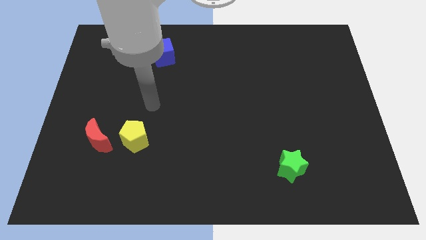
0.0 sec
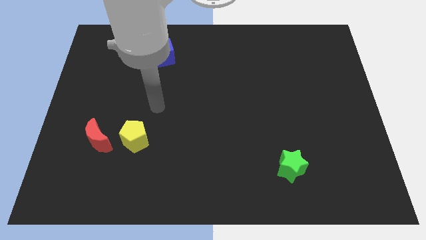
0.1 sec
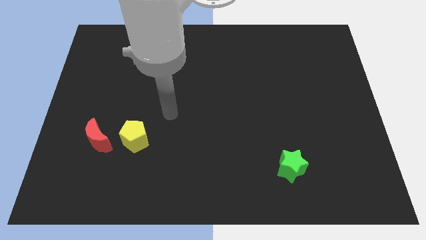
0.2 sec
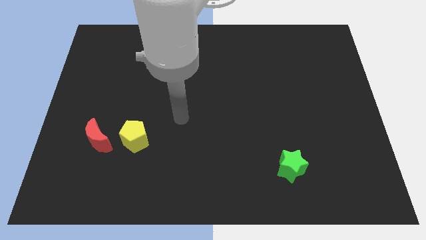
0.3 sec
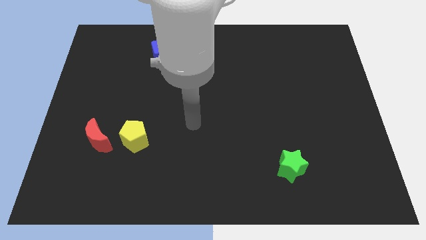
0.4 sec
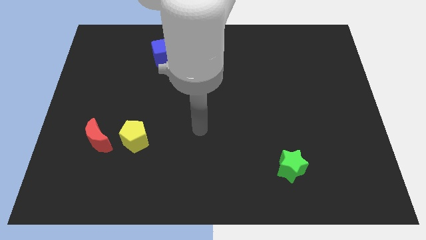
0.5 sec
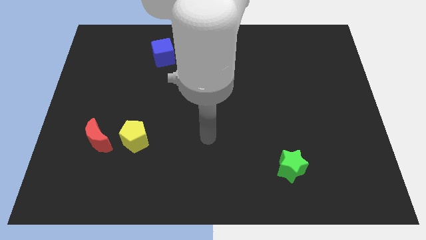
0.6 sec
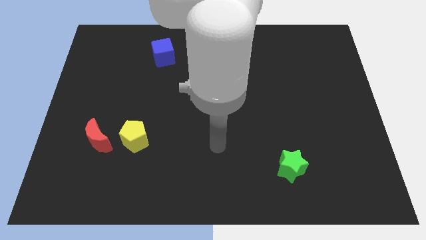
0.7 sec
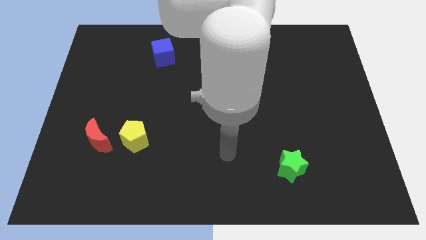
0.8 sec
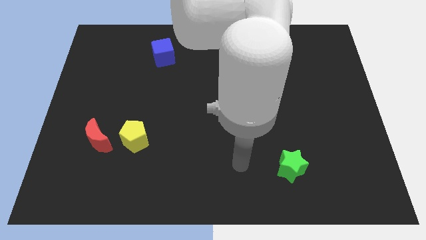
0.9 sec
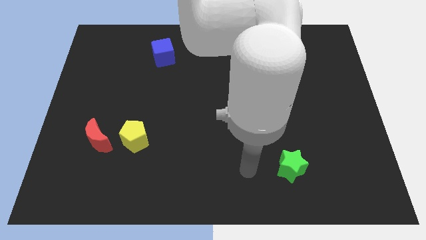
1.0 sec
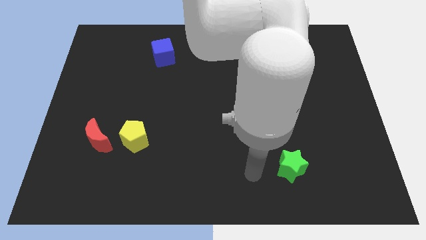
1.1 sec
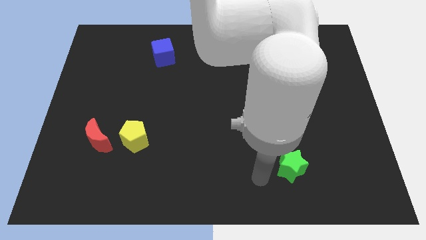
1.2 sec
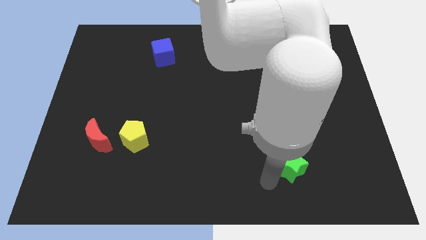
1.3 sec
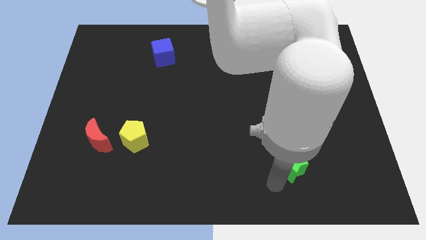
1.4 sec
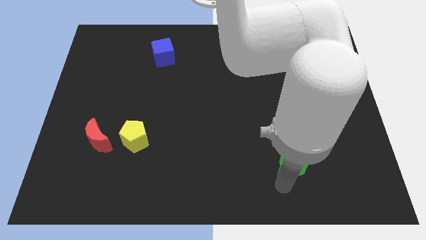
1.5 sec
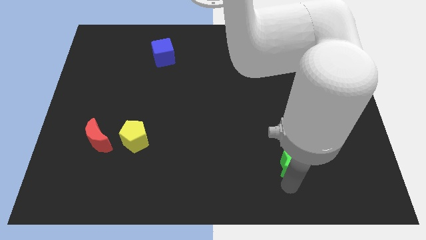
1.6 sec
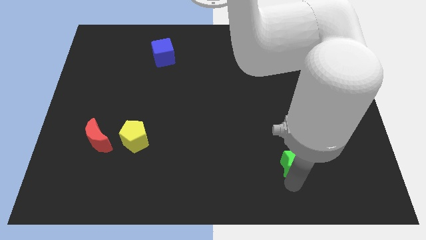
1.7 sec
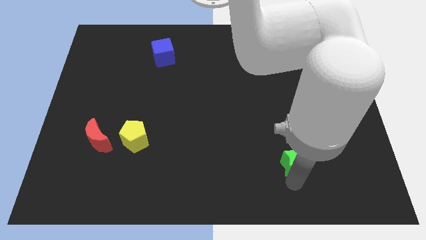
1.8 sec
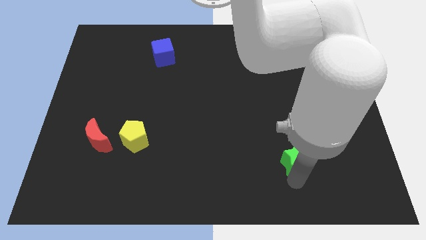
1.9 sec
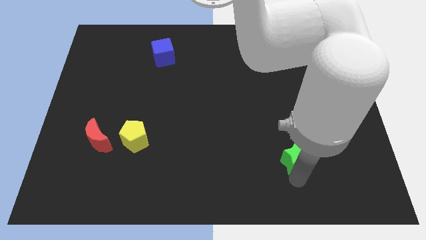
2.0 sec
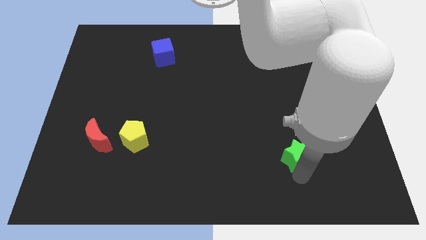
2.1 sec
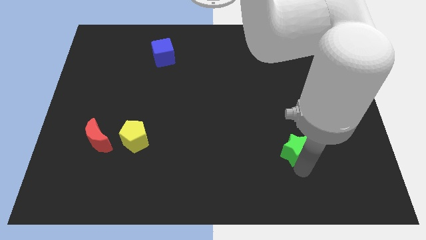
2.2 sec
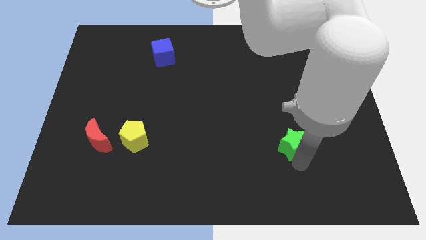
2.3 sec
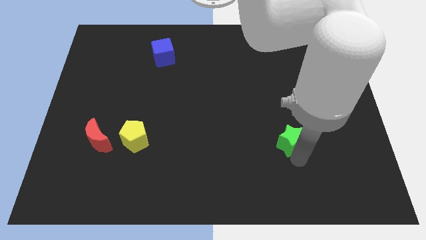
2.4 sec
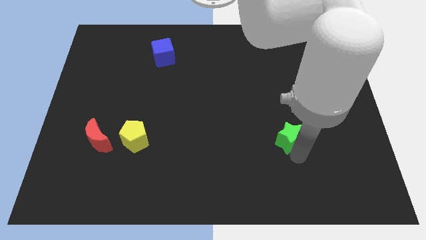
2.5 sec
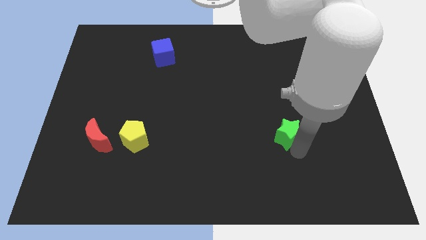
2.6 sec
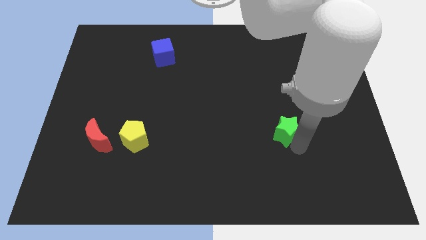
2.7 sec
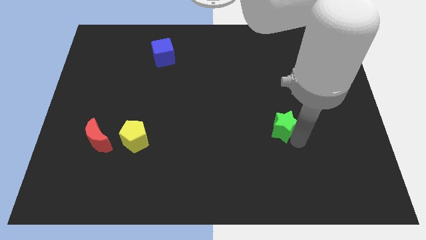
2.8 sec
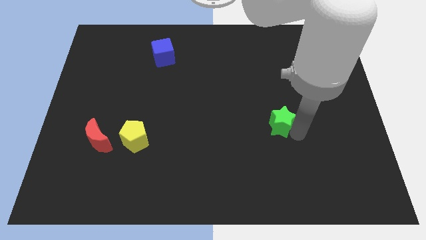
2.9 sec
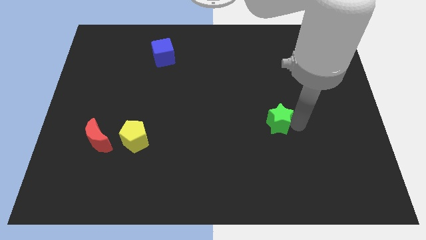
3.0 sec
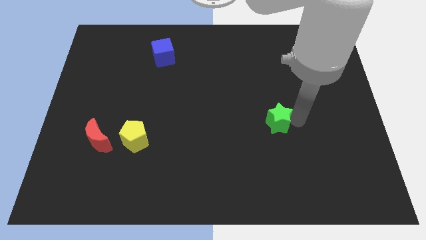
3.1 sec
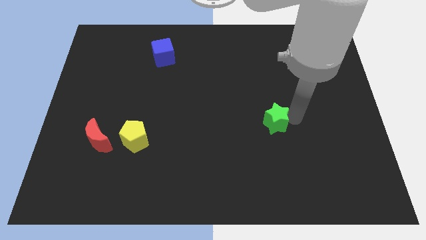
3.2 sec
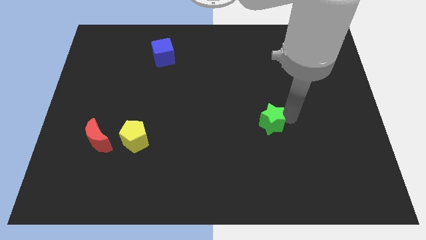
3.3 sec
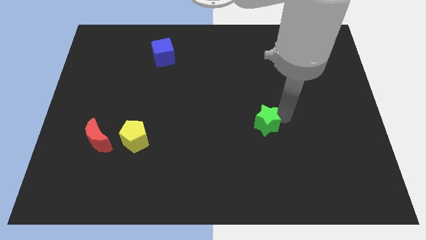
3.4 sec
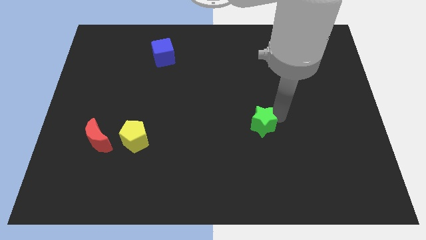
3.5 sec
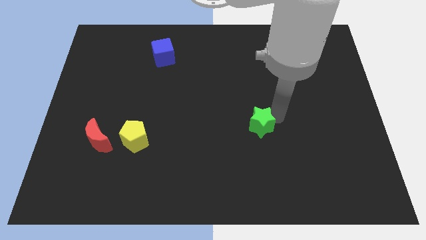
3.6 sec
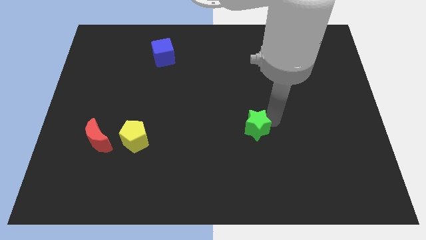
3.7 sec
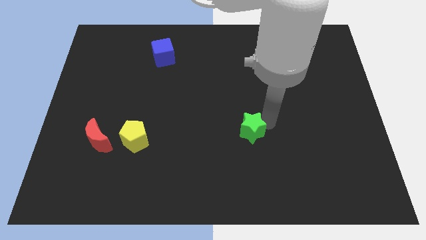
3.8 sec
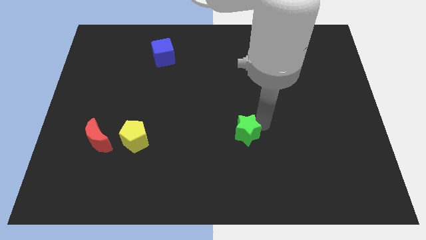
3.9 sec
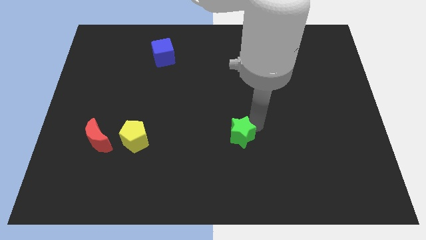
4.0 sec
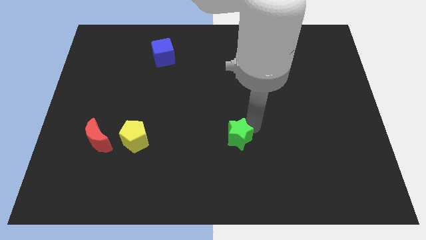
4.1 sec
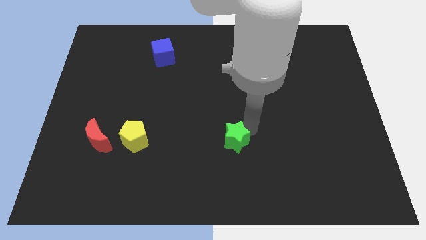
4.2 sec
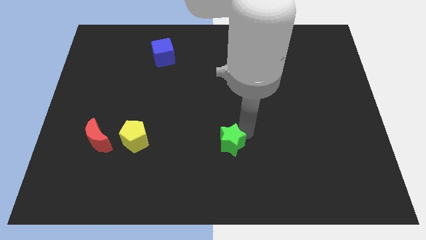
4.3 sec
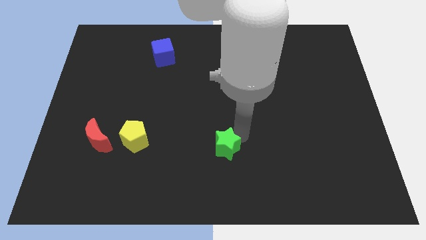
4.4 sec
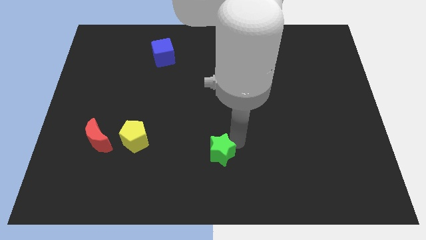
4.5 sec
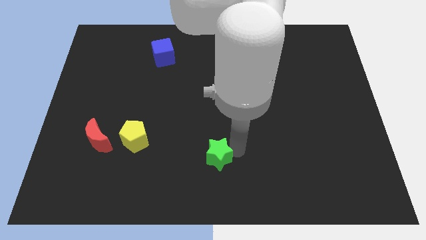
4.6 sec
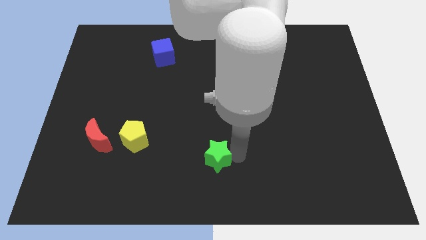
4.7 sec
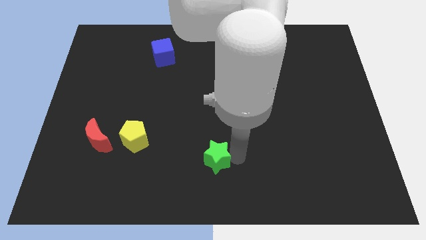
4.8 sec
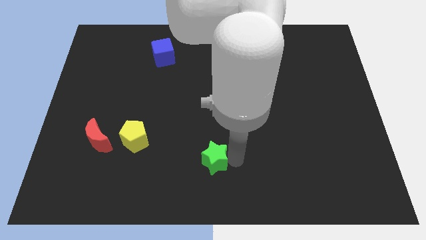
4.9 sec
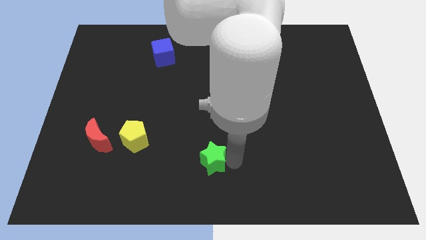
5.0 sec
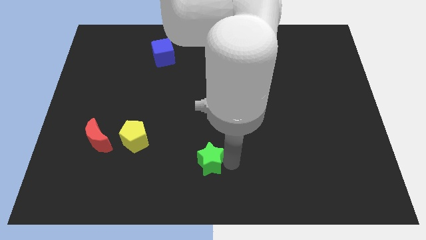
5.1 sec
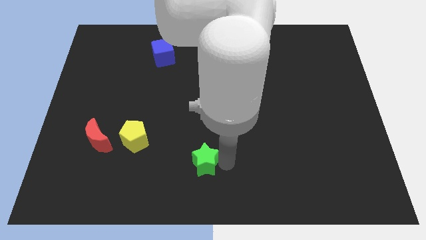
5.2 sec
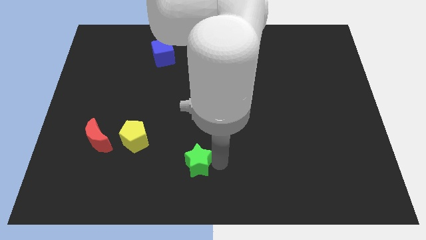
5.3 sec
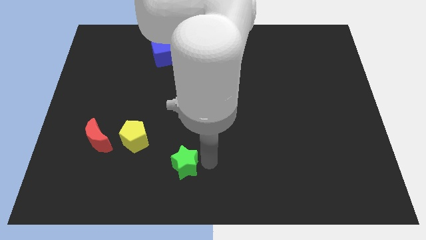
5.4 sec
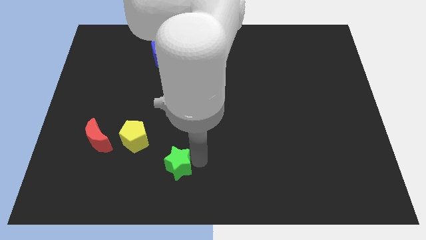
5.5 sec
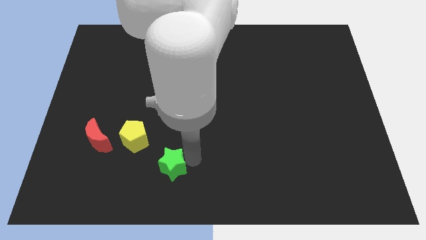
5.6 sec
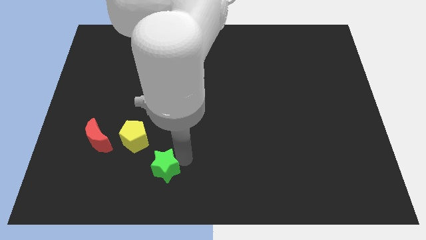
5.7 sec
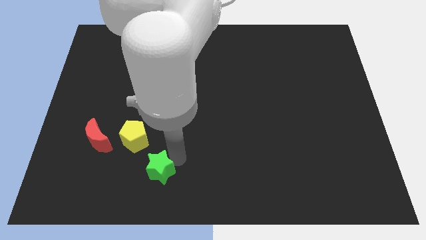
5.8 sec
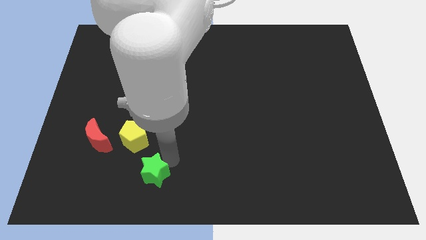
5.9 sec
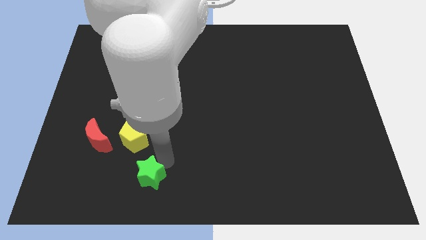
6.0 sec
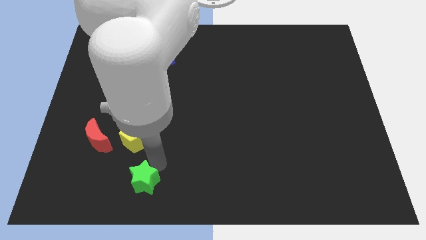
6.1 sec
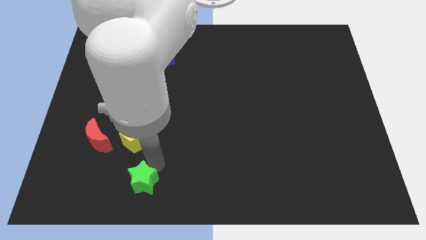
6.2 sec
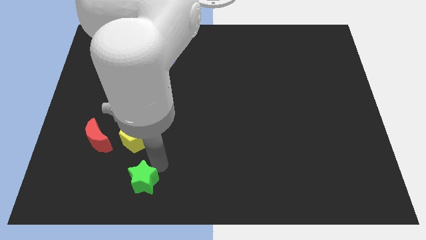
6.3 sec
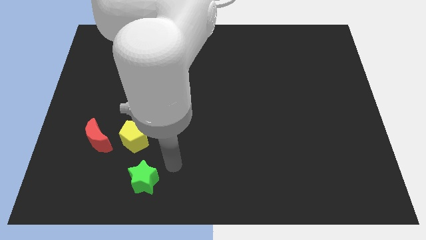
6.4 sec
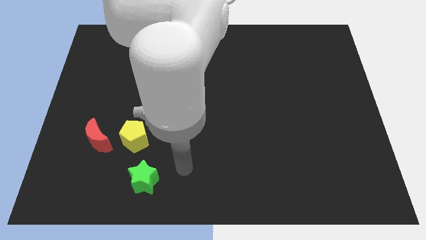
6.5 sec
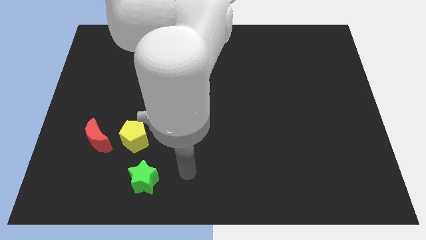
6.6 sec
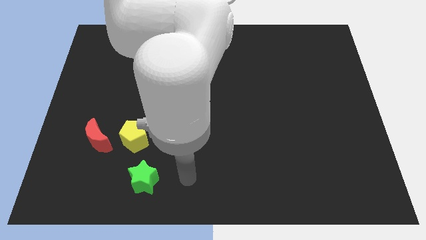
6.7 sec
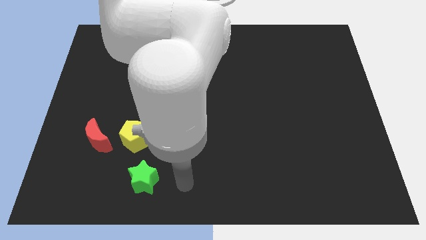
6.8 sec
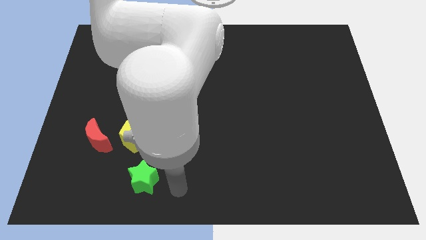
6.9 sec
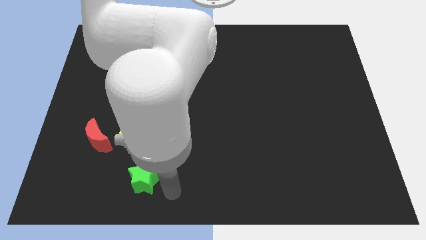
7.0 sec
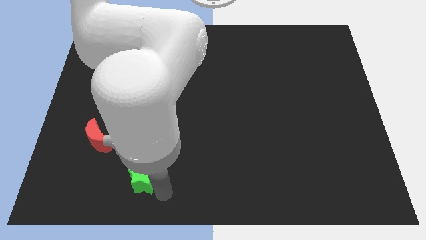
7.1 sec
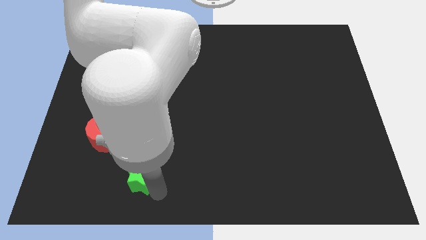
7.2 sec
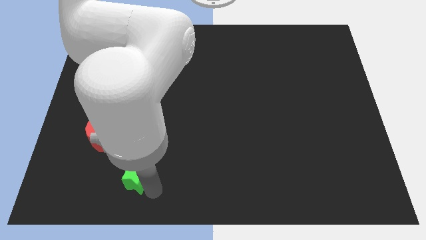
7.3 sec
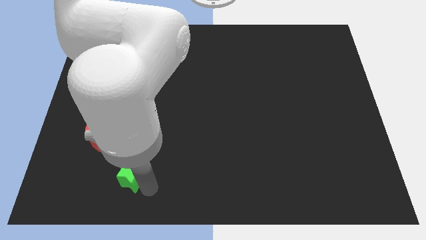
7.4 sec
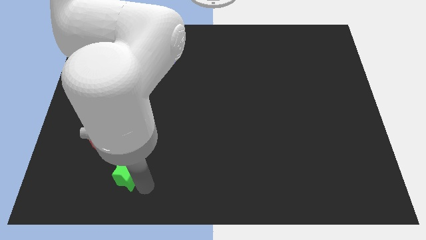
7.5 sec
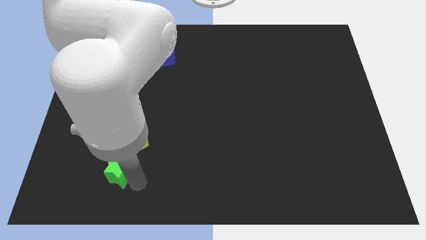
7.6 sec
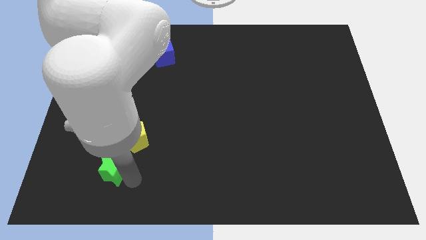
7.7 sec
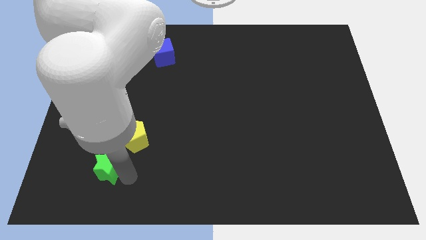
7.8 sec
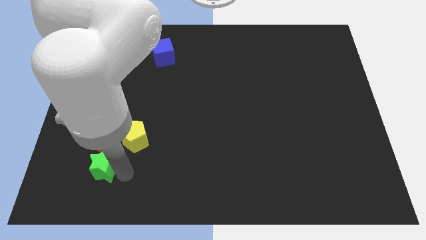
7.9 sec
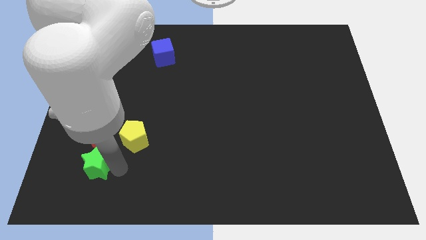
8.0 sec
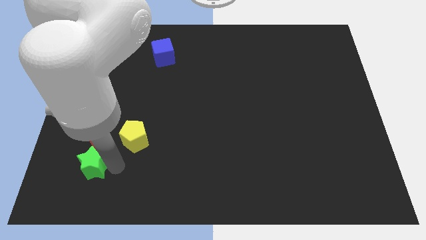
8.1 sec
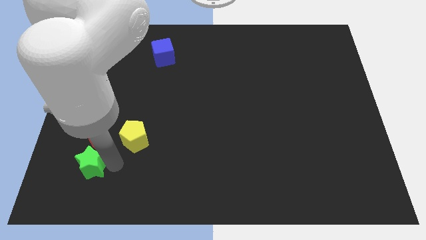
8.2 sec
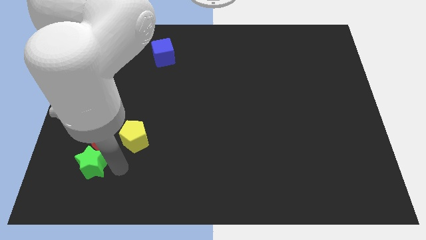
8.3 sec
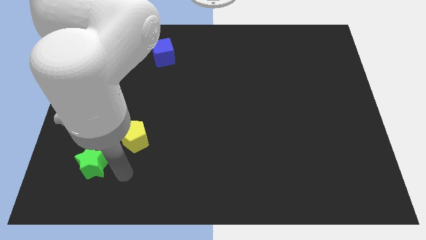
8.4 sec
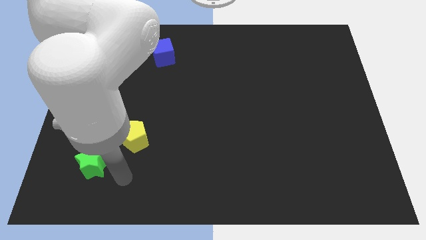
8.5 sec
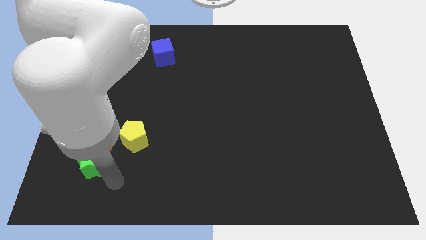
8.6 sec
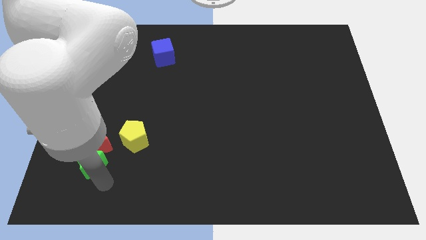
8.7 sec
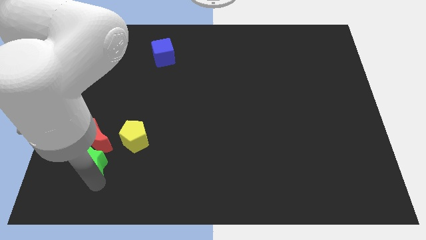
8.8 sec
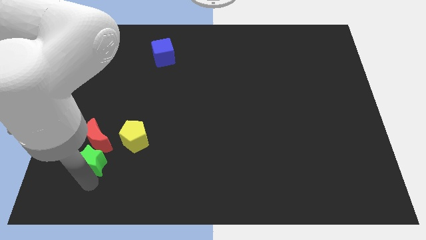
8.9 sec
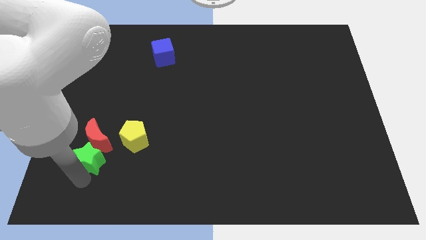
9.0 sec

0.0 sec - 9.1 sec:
slide the green star towards the red moon
